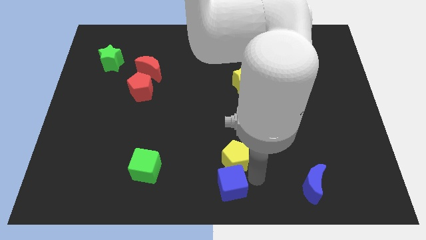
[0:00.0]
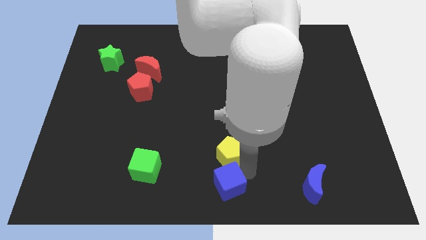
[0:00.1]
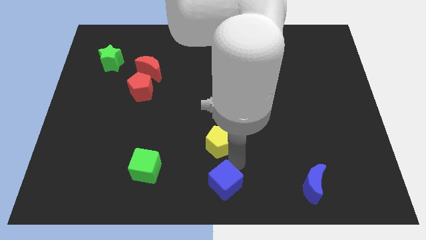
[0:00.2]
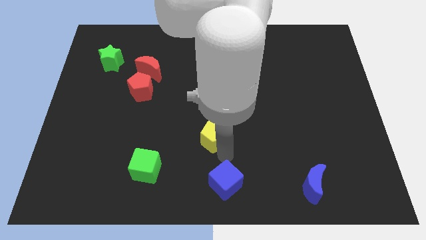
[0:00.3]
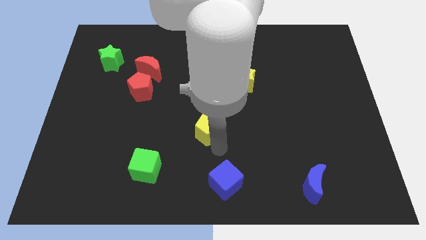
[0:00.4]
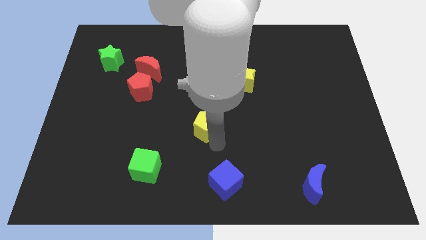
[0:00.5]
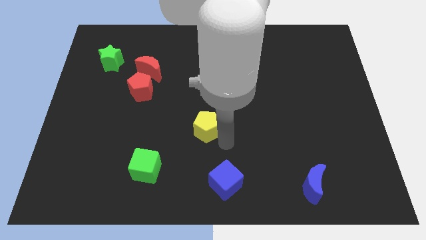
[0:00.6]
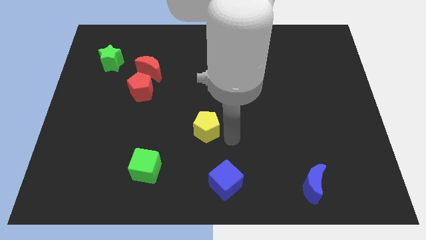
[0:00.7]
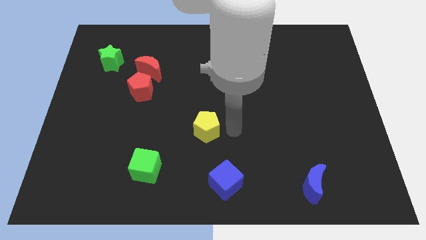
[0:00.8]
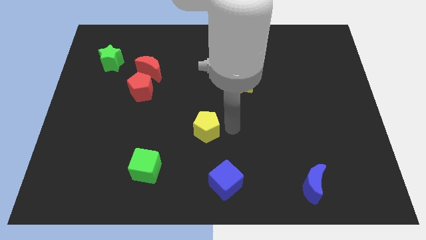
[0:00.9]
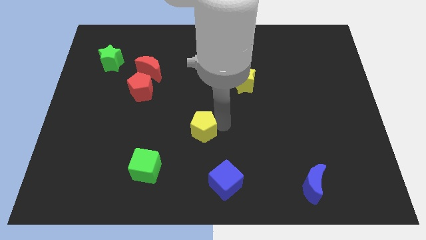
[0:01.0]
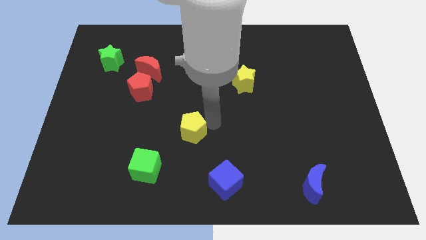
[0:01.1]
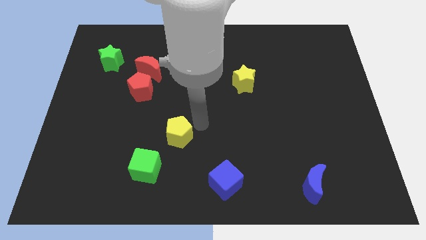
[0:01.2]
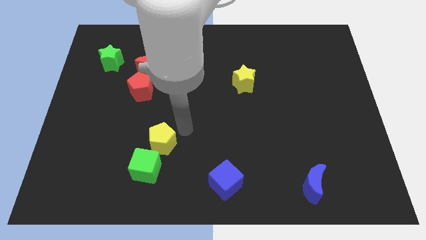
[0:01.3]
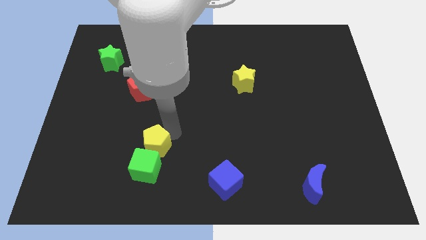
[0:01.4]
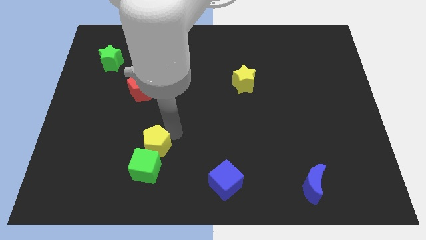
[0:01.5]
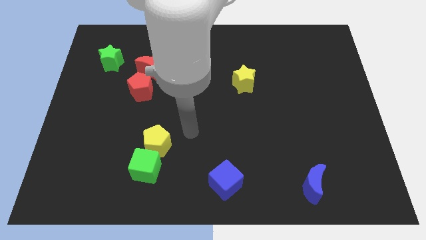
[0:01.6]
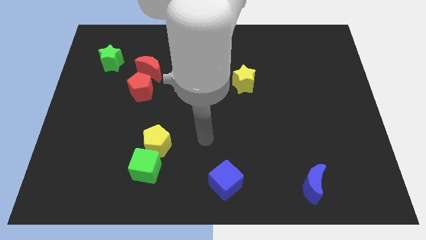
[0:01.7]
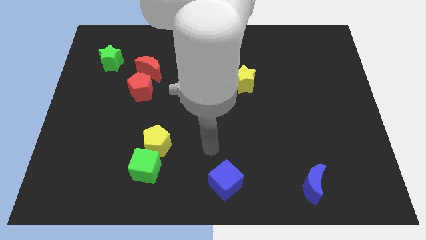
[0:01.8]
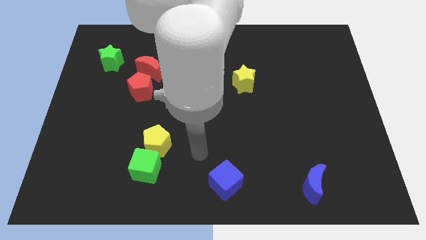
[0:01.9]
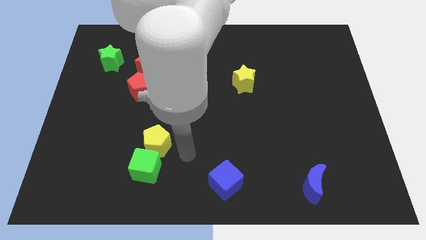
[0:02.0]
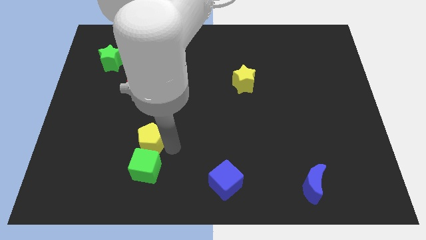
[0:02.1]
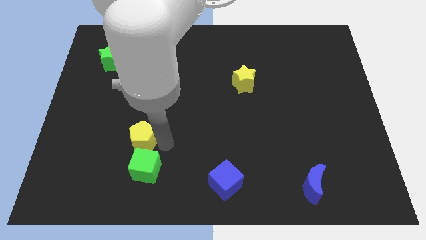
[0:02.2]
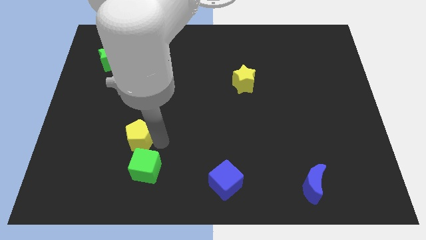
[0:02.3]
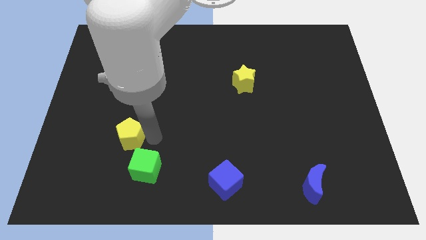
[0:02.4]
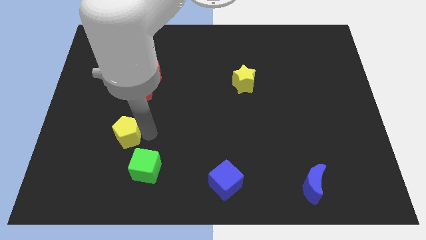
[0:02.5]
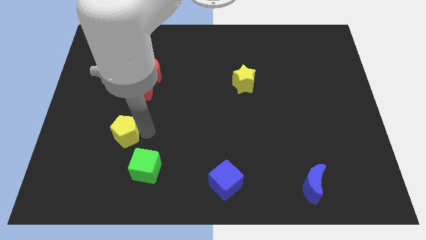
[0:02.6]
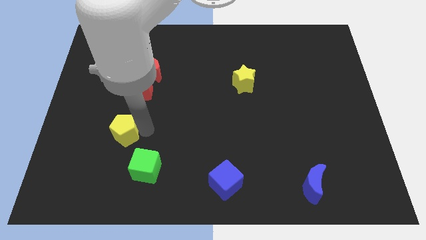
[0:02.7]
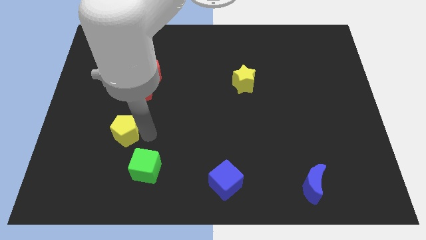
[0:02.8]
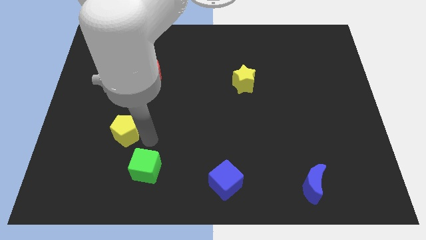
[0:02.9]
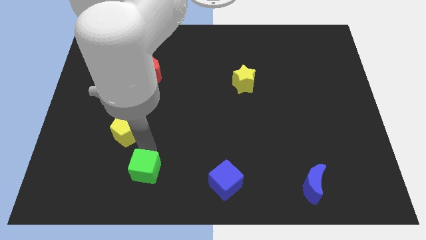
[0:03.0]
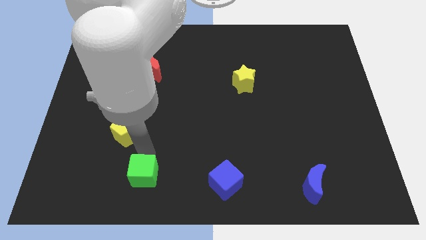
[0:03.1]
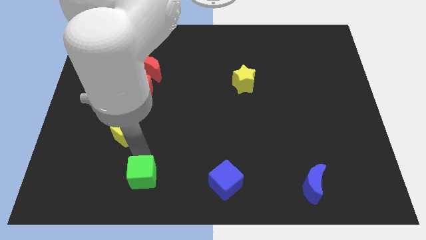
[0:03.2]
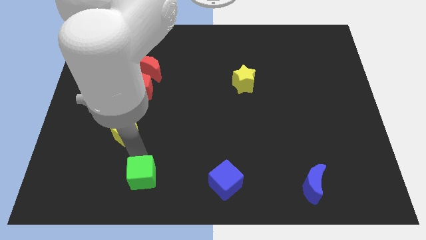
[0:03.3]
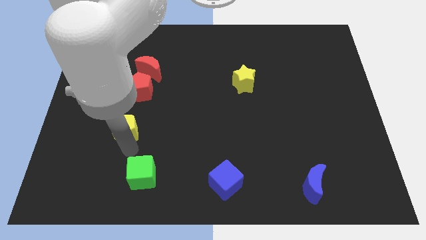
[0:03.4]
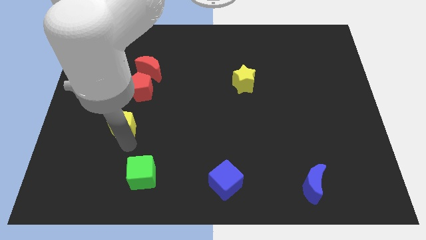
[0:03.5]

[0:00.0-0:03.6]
push the yellow pentagon vertical to the green cube

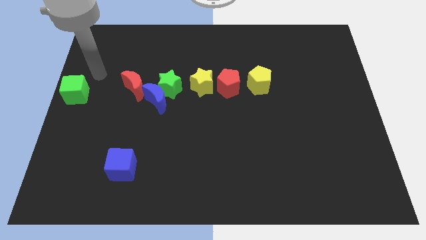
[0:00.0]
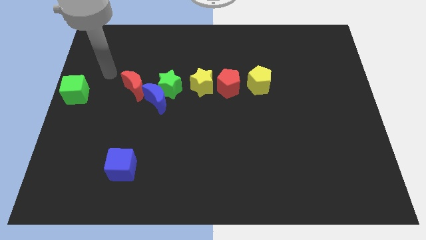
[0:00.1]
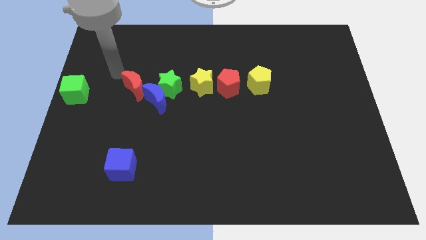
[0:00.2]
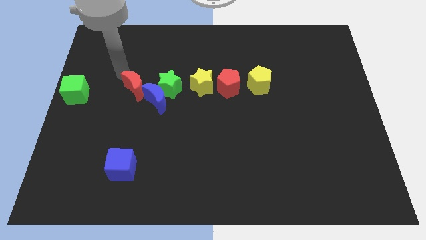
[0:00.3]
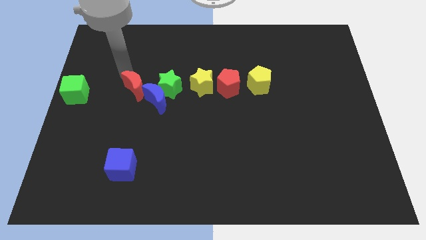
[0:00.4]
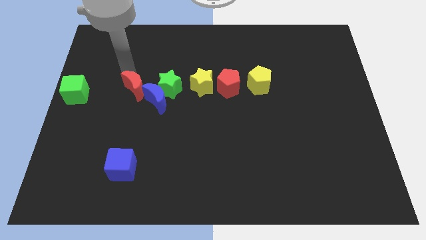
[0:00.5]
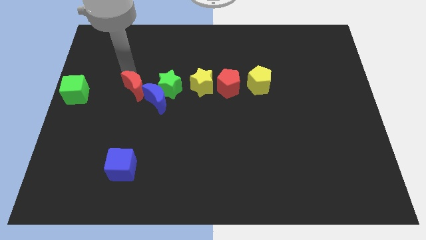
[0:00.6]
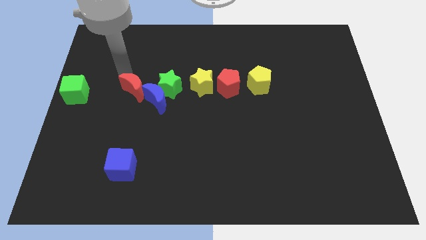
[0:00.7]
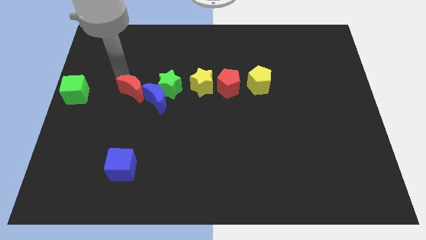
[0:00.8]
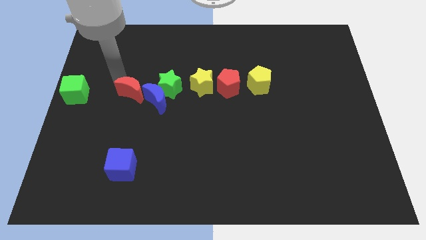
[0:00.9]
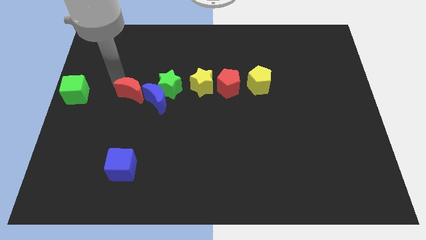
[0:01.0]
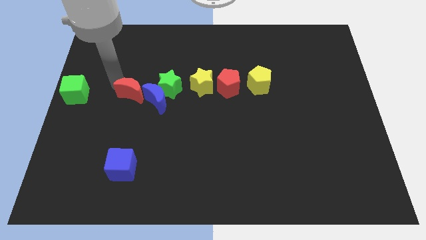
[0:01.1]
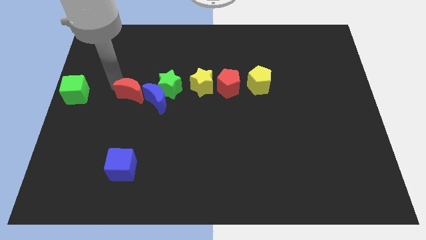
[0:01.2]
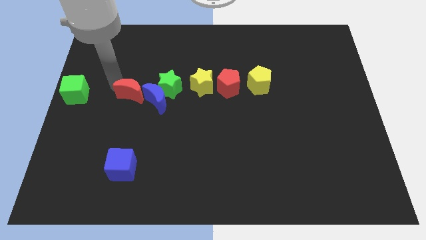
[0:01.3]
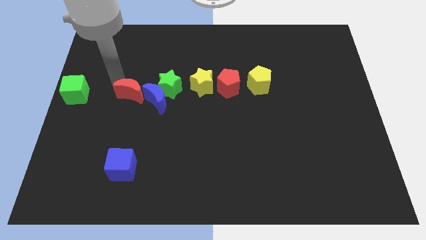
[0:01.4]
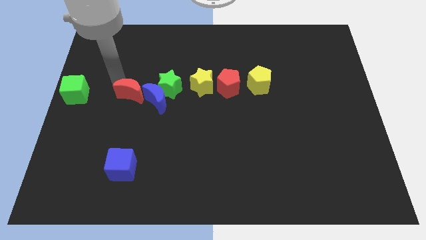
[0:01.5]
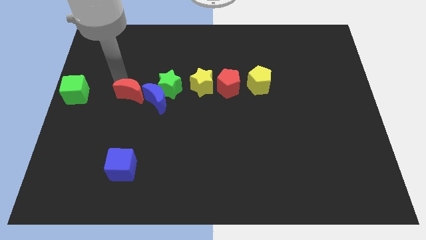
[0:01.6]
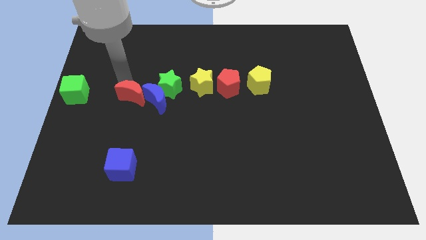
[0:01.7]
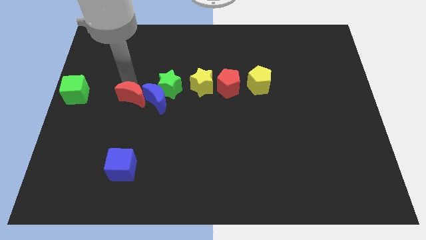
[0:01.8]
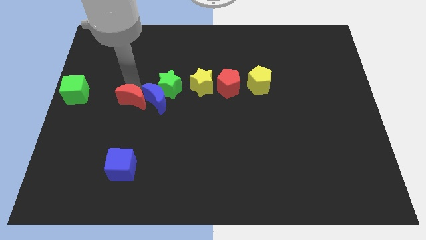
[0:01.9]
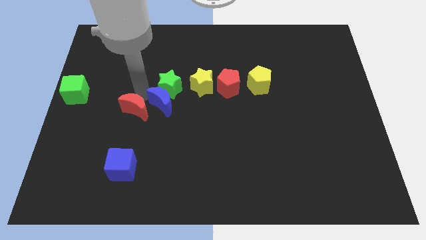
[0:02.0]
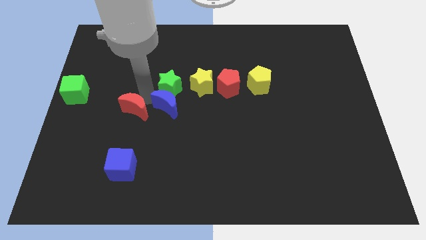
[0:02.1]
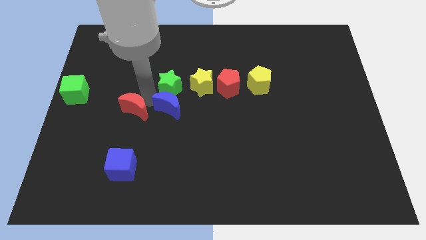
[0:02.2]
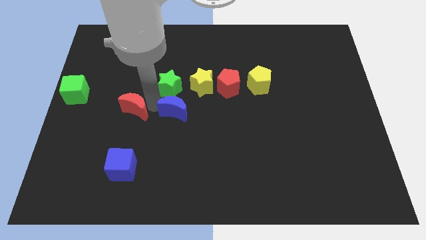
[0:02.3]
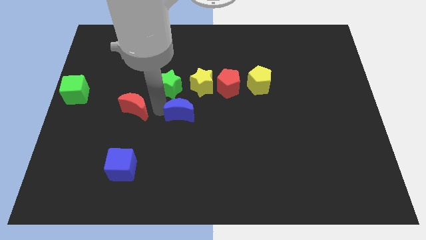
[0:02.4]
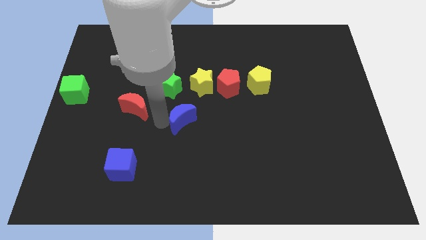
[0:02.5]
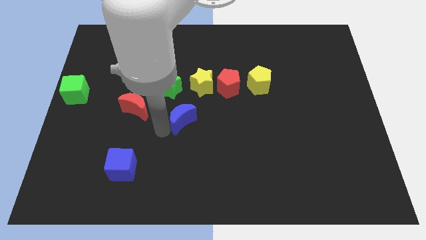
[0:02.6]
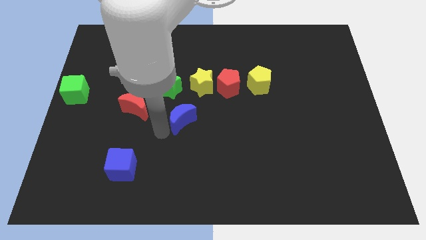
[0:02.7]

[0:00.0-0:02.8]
push the blue crescent to the bottom of the board

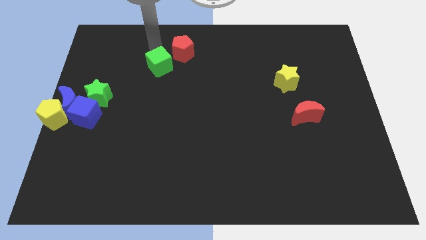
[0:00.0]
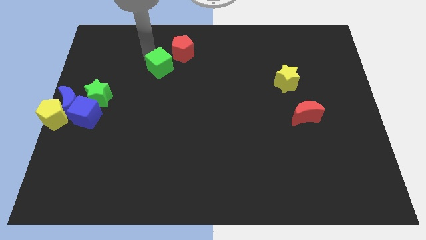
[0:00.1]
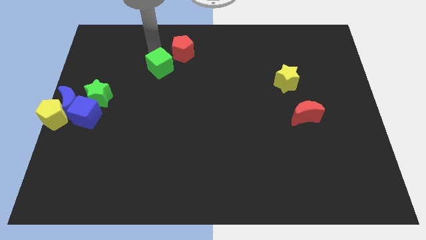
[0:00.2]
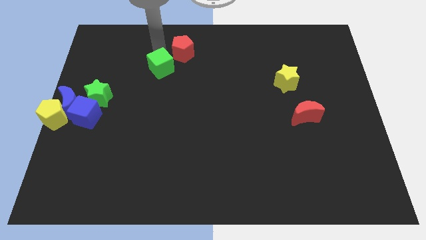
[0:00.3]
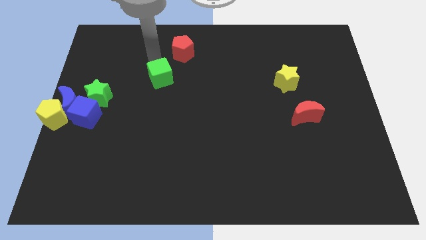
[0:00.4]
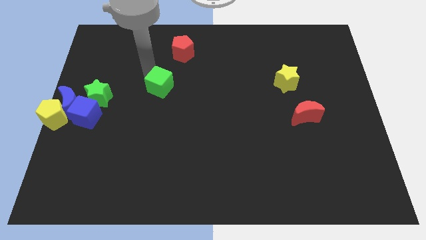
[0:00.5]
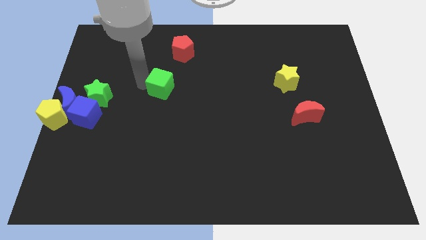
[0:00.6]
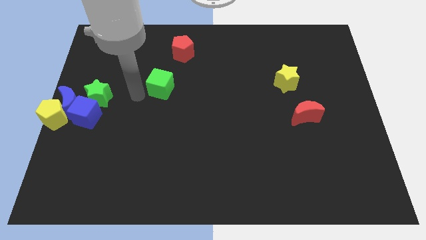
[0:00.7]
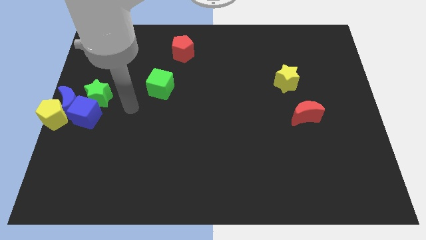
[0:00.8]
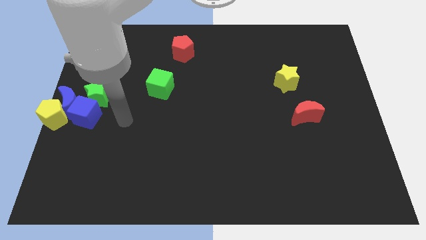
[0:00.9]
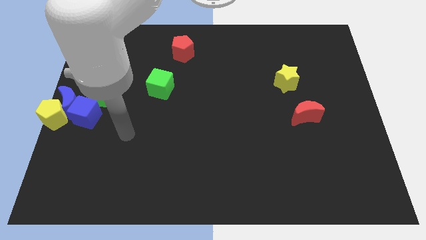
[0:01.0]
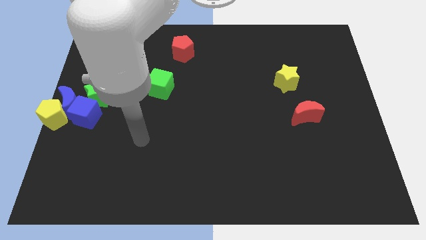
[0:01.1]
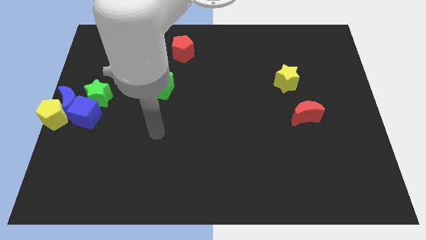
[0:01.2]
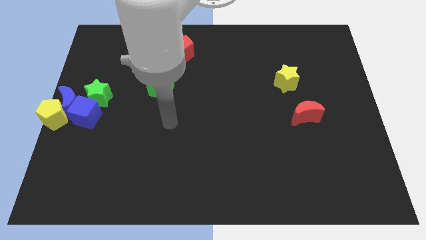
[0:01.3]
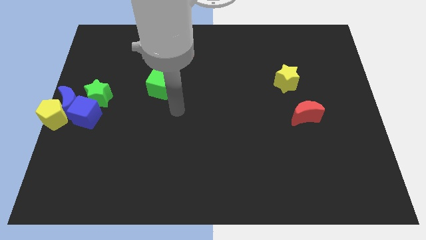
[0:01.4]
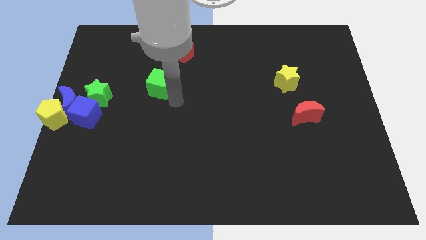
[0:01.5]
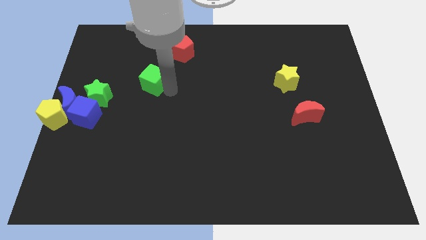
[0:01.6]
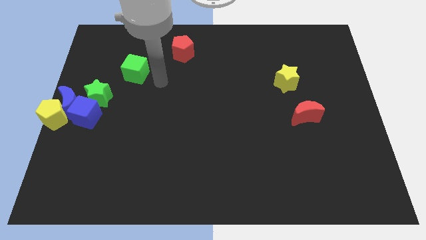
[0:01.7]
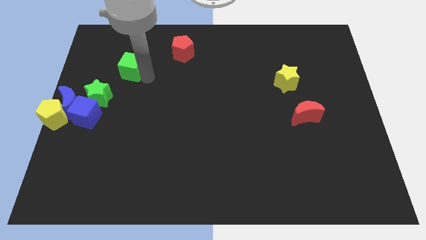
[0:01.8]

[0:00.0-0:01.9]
place the green cube diagonally to the green star

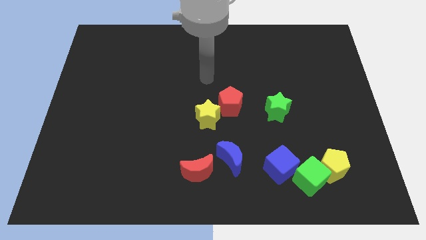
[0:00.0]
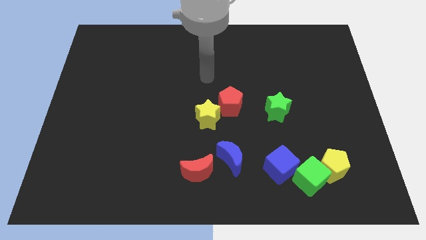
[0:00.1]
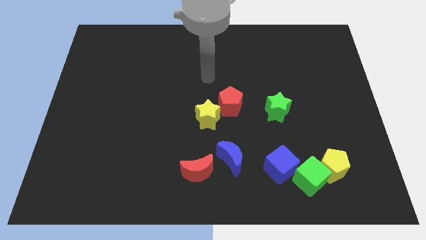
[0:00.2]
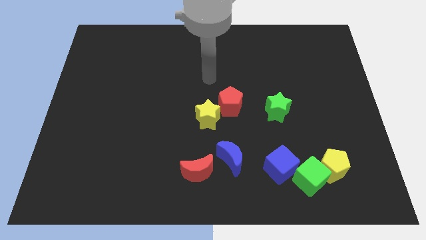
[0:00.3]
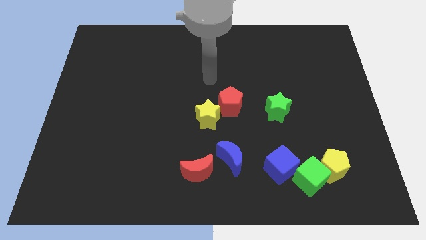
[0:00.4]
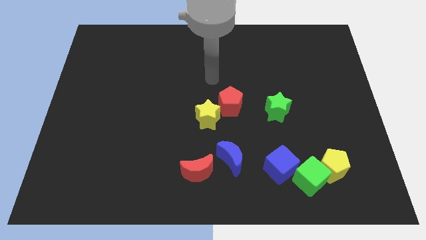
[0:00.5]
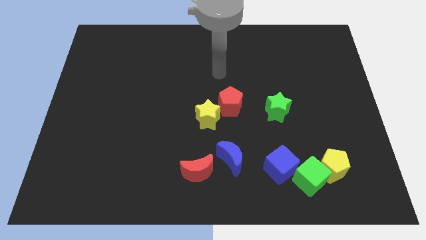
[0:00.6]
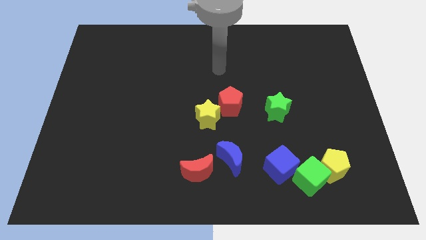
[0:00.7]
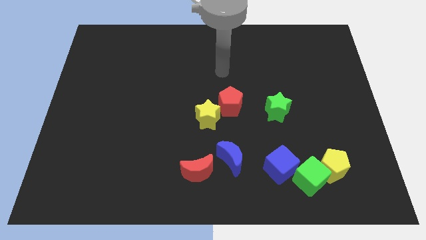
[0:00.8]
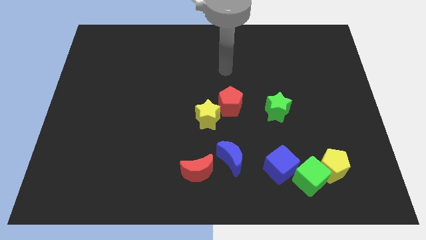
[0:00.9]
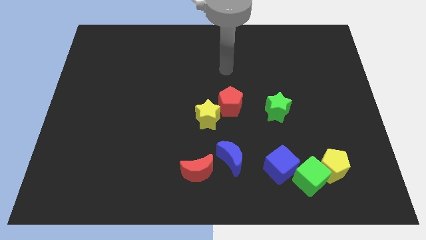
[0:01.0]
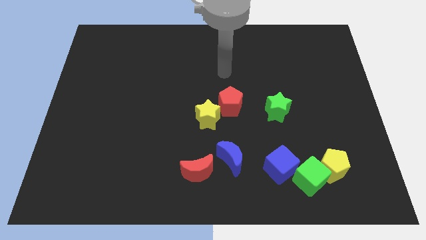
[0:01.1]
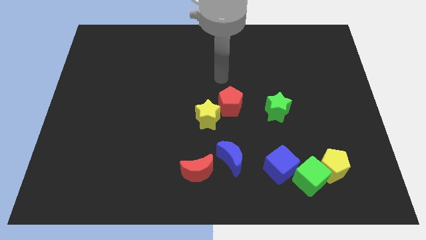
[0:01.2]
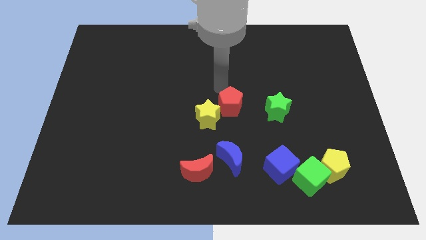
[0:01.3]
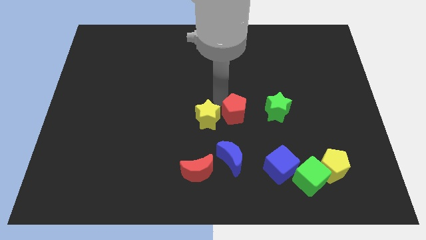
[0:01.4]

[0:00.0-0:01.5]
slightly move the red pentagon to the bottom
